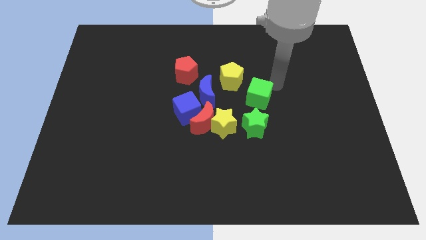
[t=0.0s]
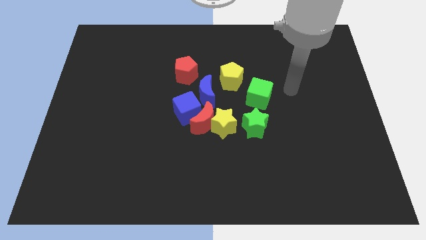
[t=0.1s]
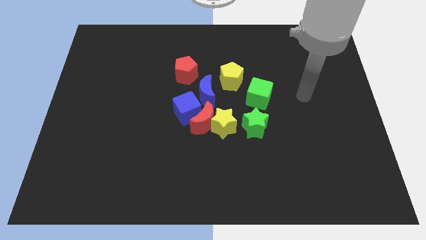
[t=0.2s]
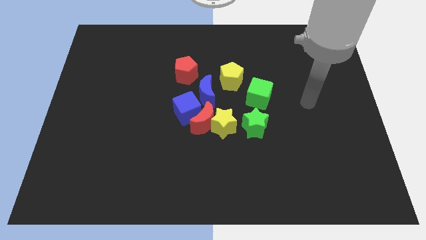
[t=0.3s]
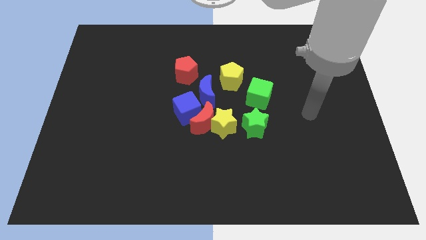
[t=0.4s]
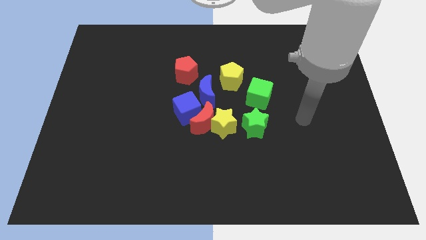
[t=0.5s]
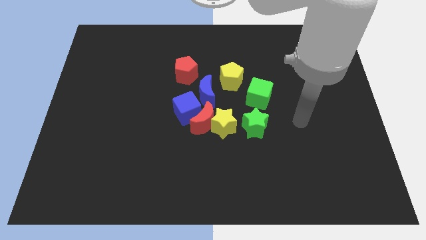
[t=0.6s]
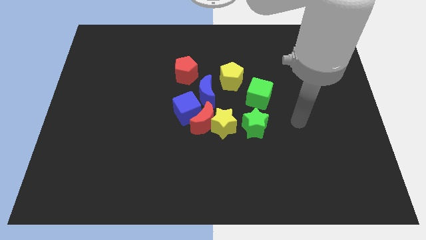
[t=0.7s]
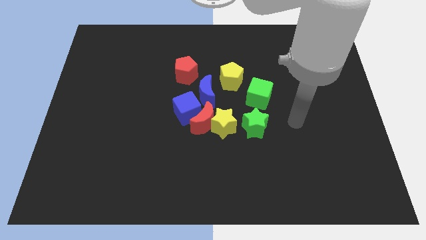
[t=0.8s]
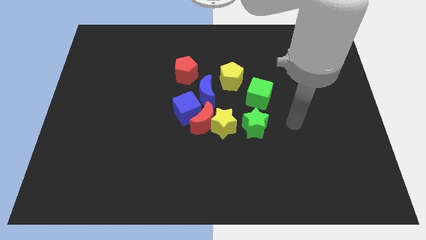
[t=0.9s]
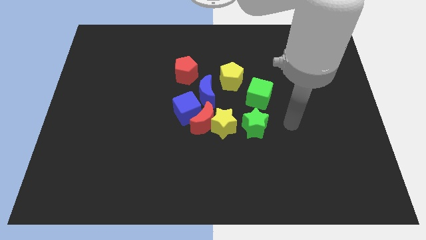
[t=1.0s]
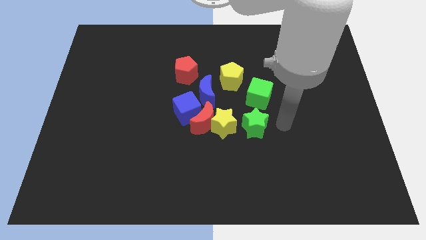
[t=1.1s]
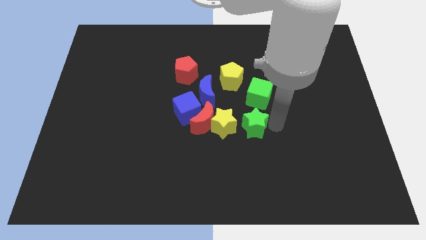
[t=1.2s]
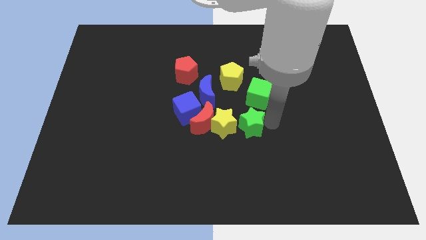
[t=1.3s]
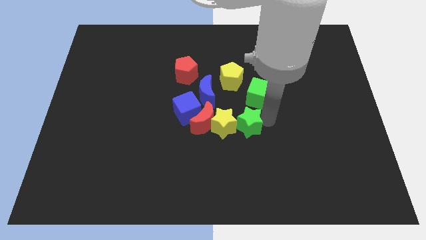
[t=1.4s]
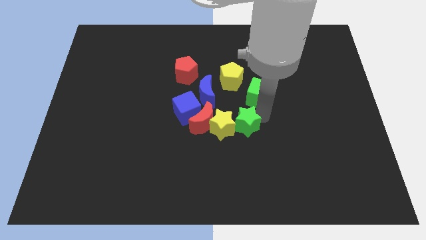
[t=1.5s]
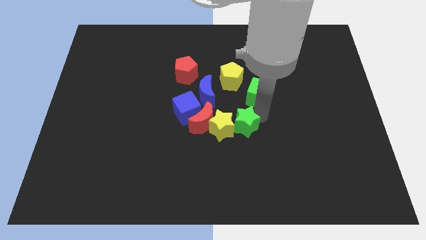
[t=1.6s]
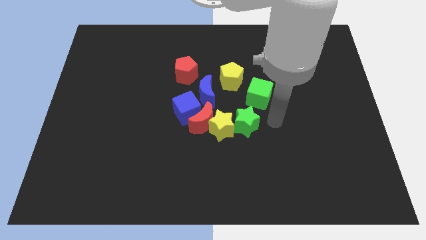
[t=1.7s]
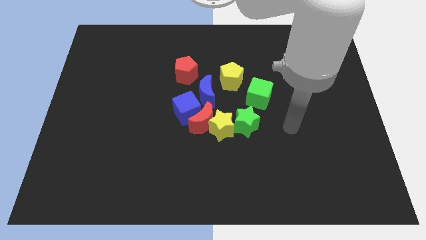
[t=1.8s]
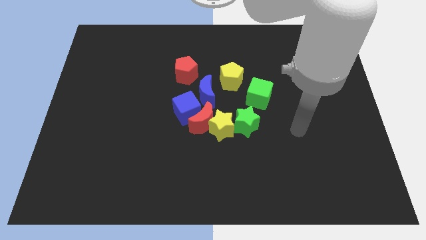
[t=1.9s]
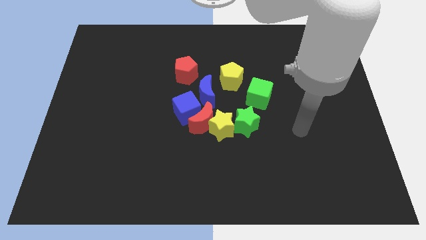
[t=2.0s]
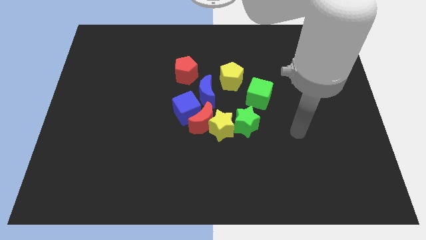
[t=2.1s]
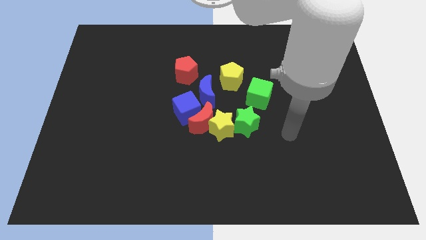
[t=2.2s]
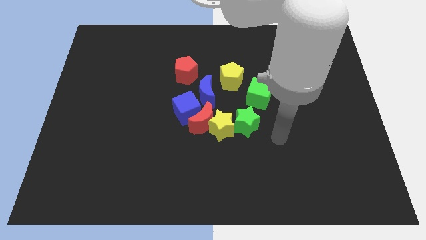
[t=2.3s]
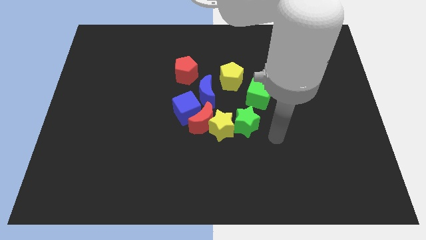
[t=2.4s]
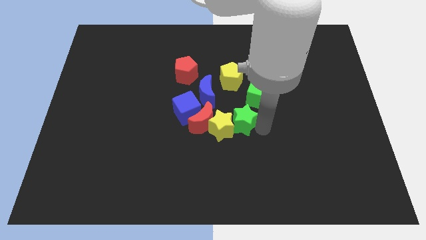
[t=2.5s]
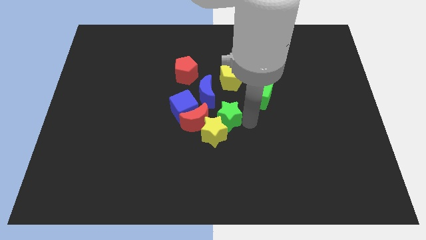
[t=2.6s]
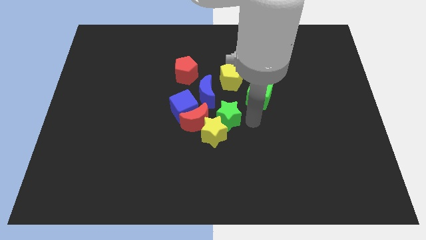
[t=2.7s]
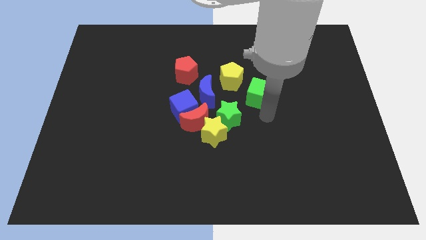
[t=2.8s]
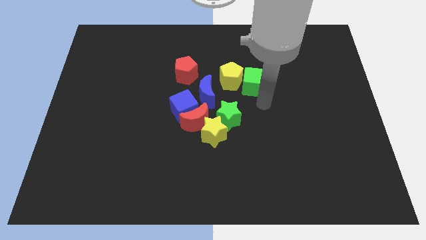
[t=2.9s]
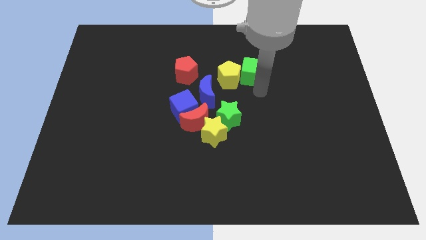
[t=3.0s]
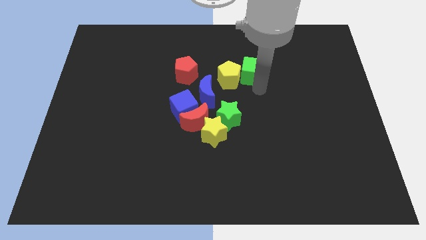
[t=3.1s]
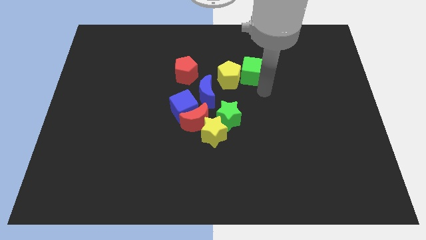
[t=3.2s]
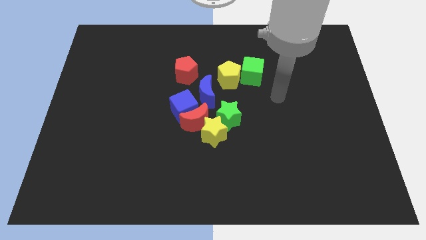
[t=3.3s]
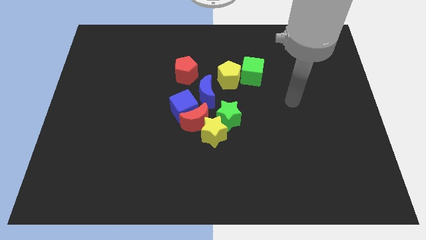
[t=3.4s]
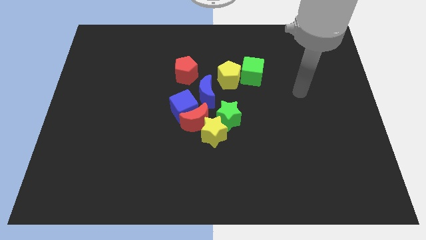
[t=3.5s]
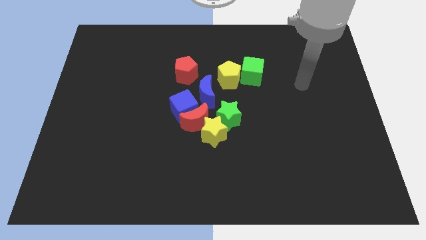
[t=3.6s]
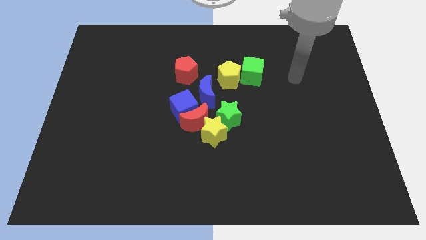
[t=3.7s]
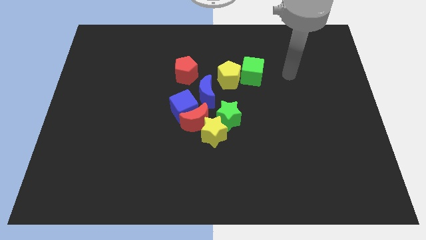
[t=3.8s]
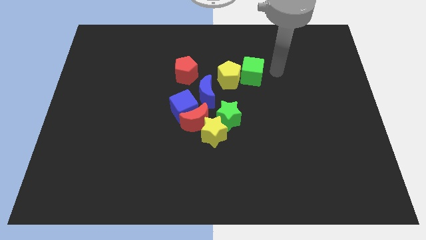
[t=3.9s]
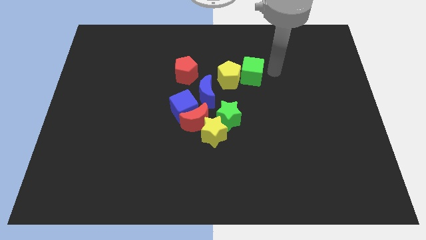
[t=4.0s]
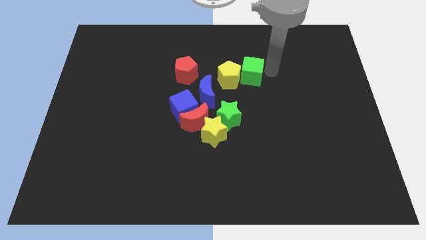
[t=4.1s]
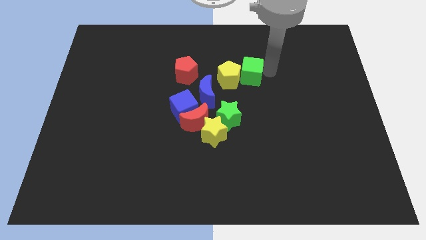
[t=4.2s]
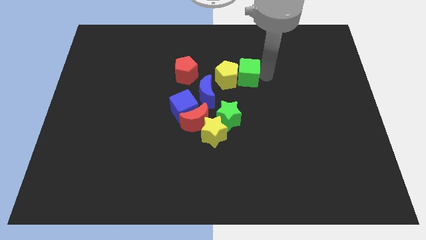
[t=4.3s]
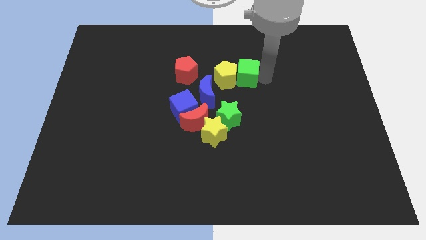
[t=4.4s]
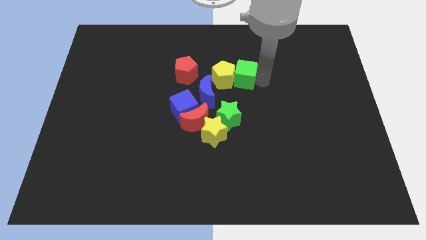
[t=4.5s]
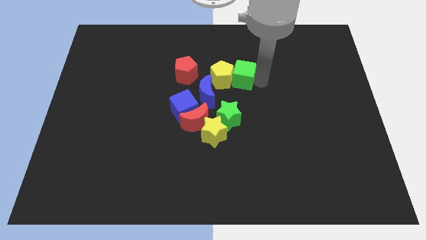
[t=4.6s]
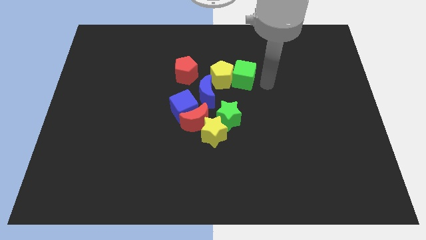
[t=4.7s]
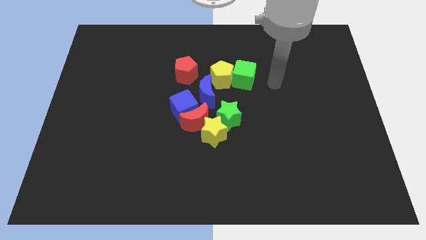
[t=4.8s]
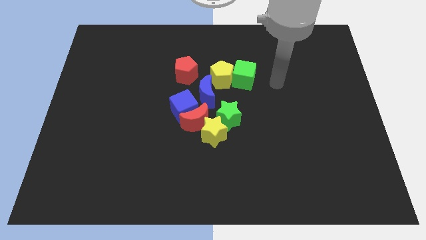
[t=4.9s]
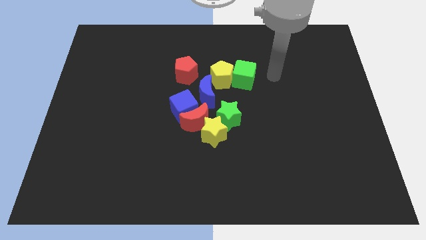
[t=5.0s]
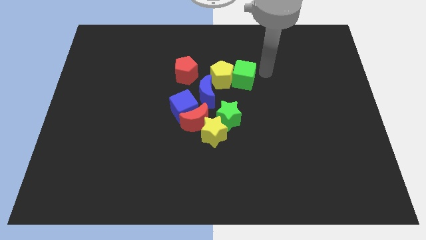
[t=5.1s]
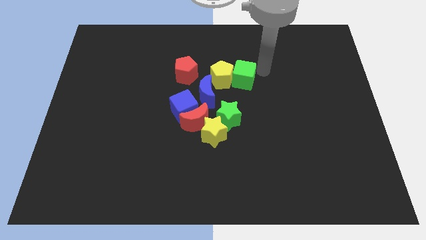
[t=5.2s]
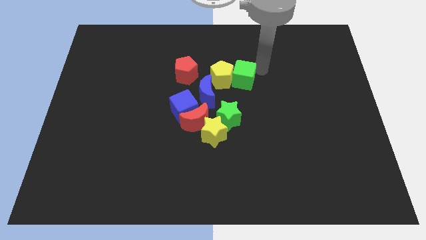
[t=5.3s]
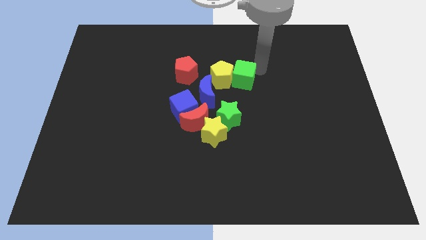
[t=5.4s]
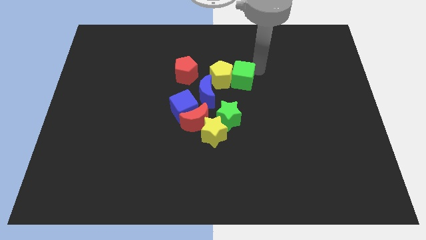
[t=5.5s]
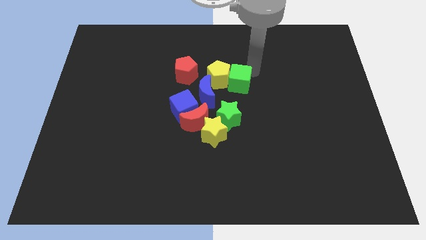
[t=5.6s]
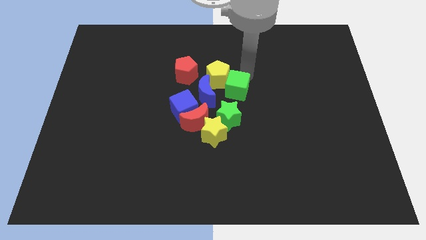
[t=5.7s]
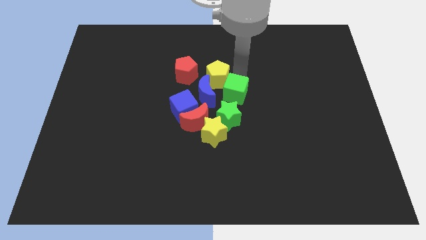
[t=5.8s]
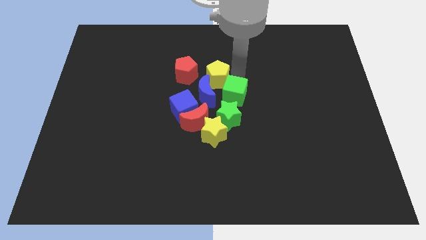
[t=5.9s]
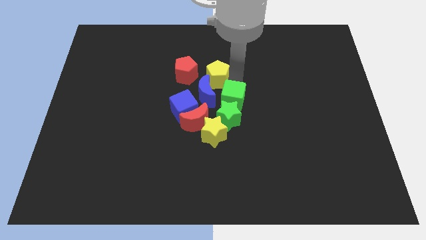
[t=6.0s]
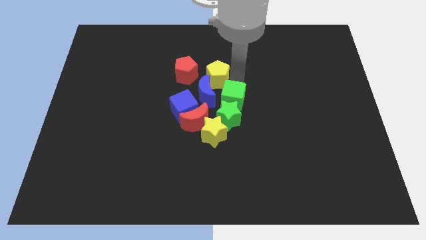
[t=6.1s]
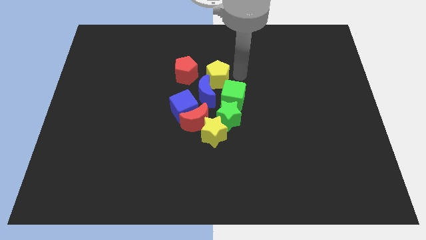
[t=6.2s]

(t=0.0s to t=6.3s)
place the green star and cube at the right side of the blue crescent

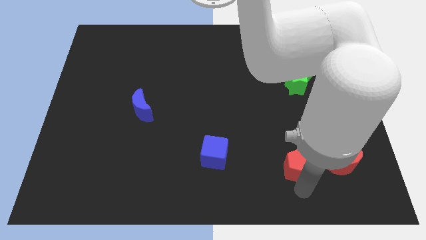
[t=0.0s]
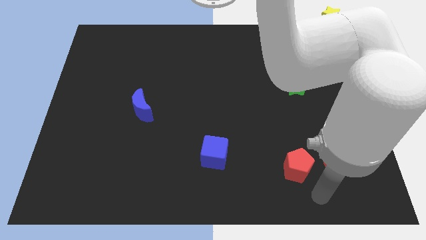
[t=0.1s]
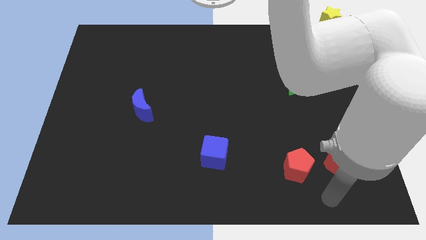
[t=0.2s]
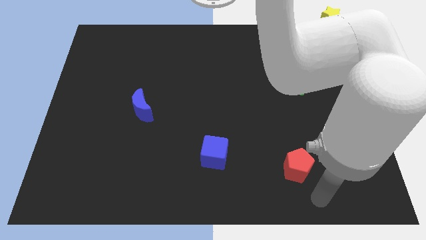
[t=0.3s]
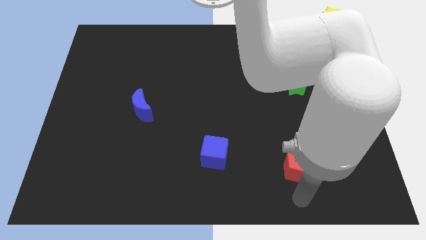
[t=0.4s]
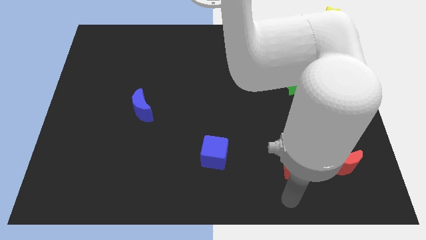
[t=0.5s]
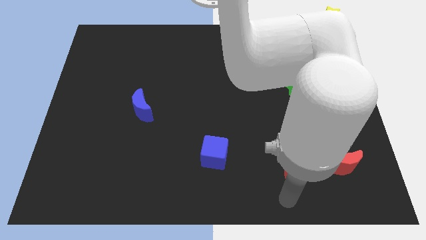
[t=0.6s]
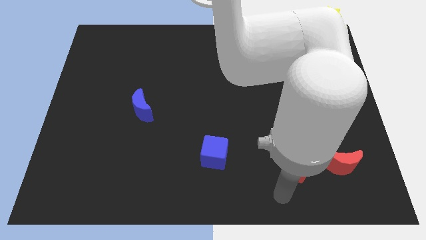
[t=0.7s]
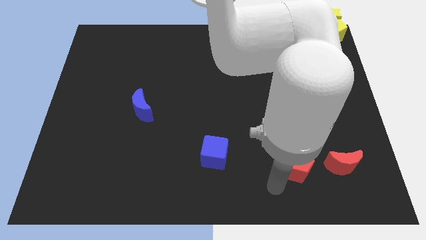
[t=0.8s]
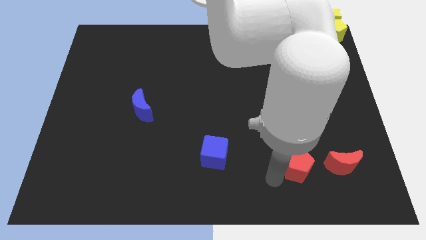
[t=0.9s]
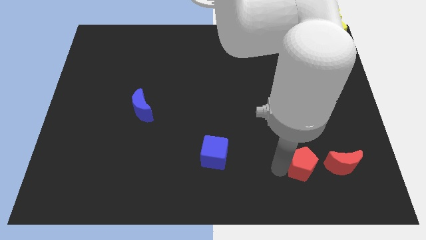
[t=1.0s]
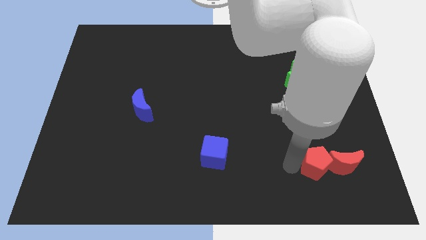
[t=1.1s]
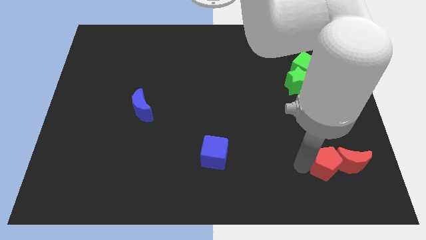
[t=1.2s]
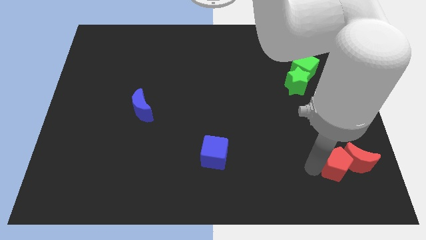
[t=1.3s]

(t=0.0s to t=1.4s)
move the red pentagon into the red moon

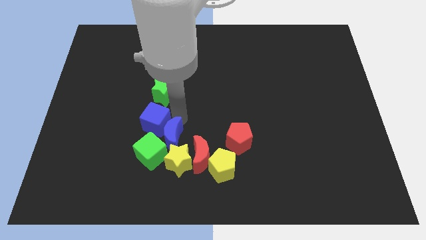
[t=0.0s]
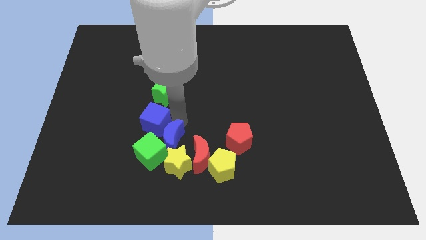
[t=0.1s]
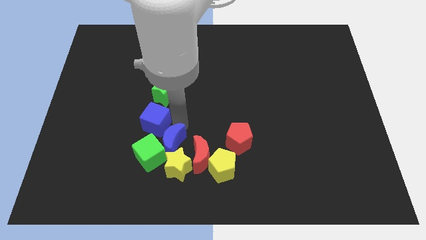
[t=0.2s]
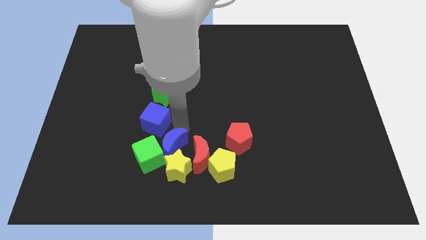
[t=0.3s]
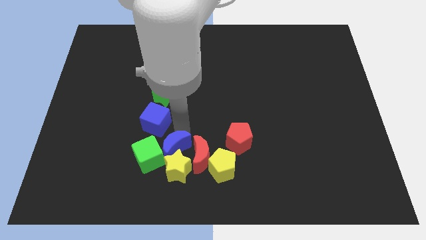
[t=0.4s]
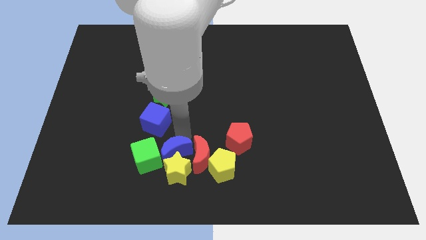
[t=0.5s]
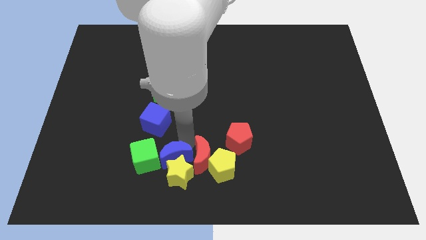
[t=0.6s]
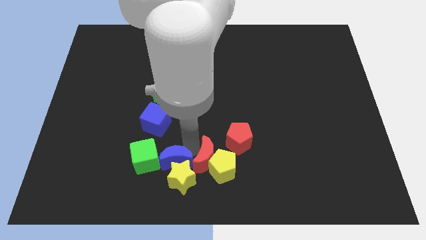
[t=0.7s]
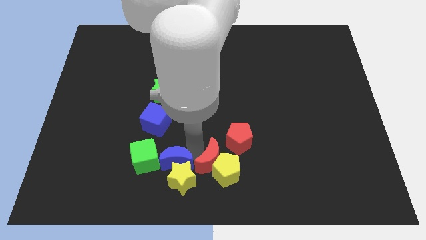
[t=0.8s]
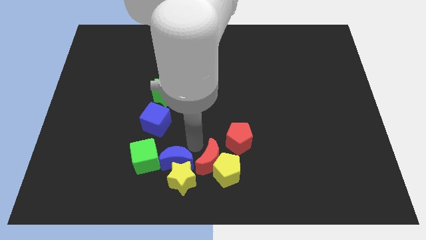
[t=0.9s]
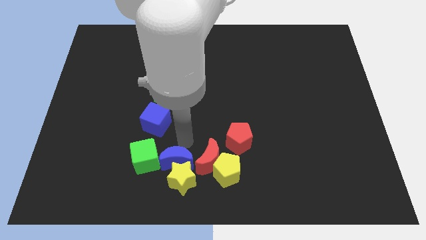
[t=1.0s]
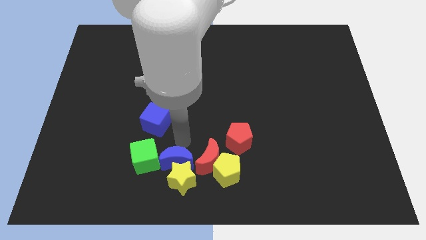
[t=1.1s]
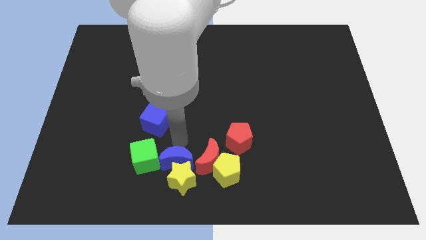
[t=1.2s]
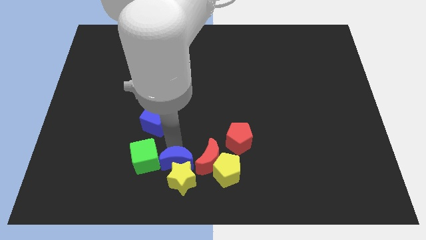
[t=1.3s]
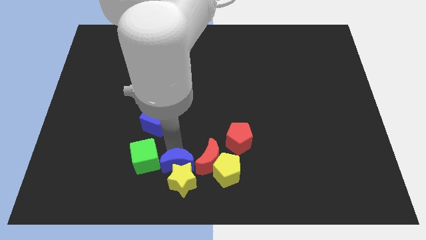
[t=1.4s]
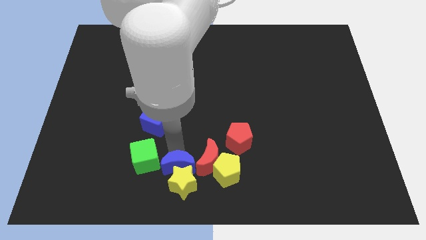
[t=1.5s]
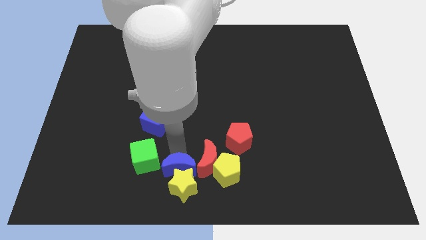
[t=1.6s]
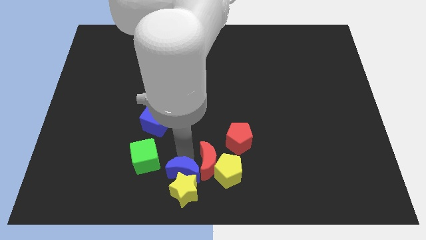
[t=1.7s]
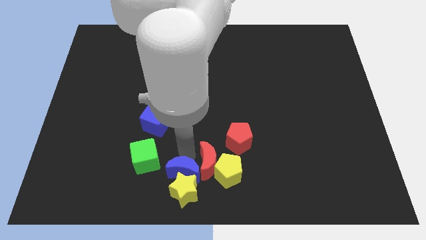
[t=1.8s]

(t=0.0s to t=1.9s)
push the blue crescent slightly downwards
